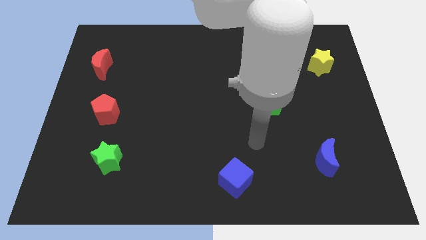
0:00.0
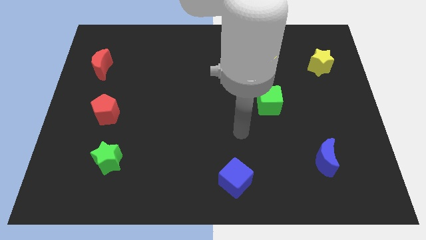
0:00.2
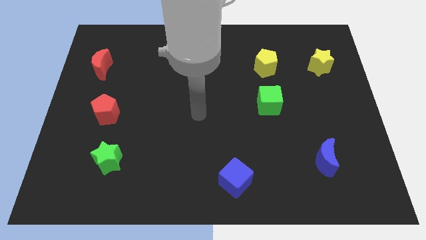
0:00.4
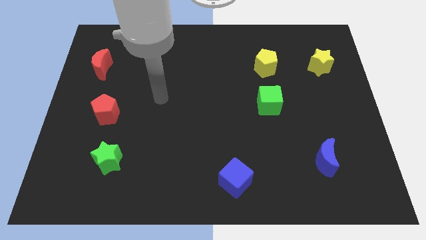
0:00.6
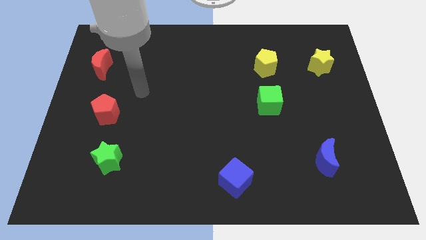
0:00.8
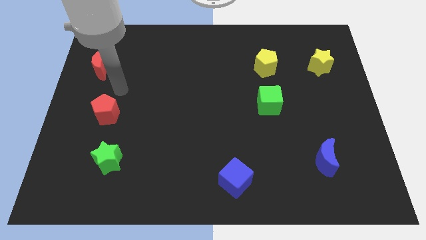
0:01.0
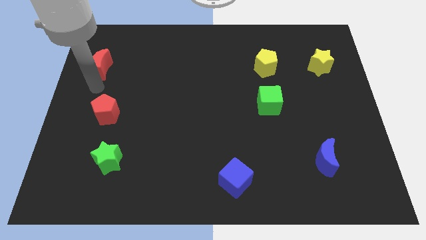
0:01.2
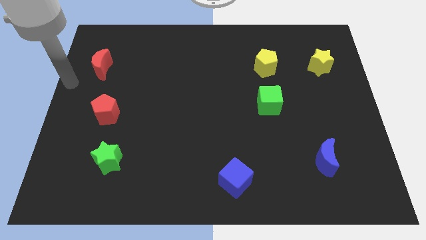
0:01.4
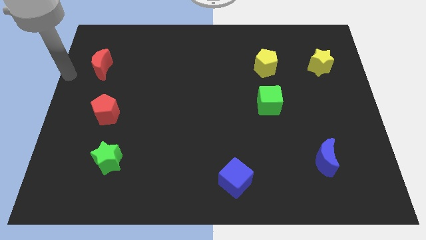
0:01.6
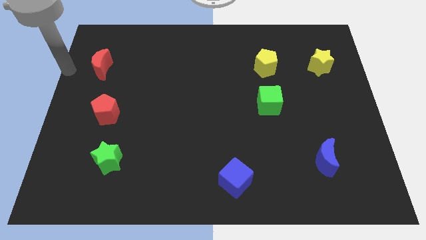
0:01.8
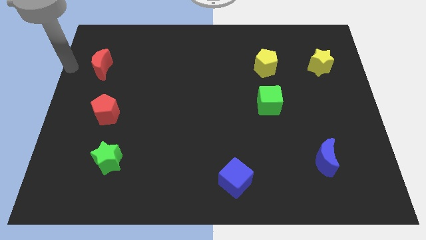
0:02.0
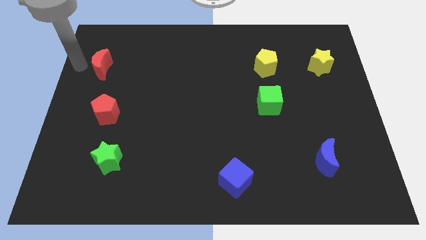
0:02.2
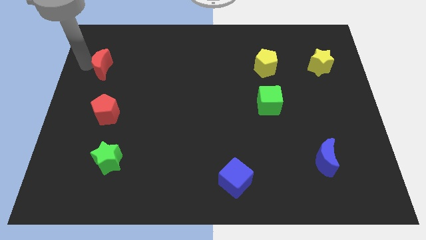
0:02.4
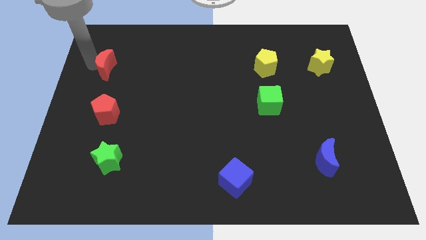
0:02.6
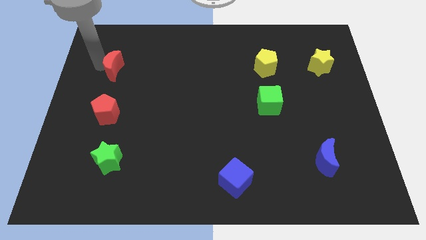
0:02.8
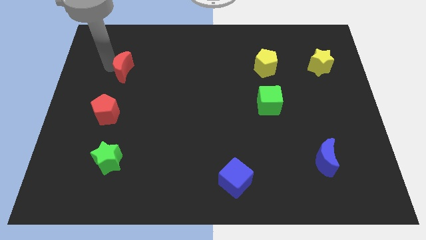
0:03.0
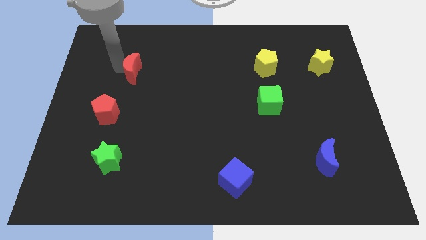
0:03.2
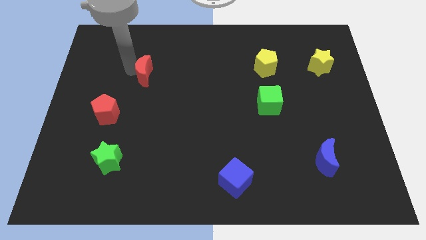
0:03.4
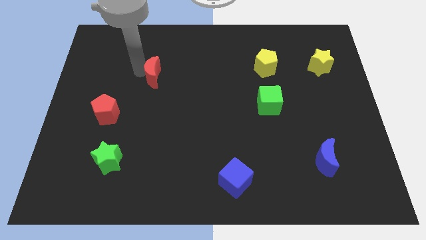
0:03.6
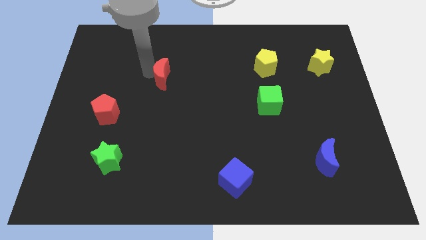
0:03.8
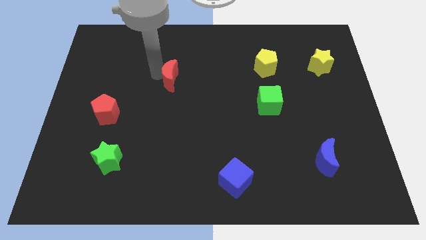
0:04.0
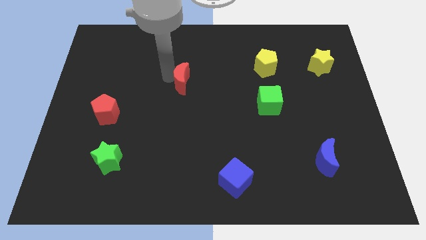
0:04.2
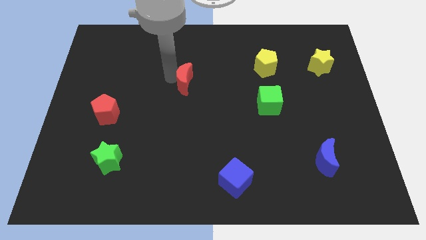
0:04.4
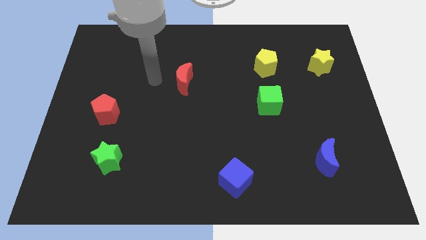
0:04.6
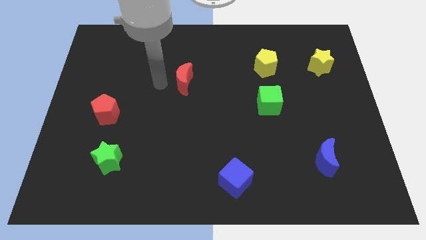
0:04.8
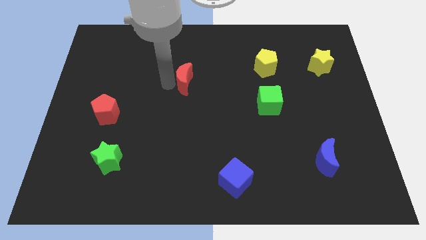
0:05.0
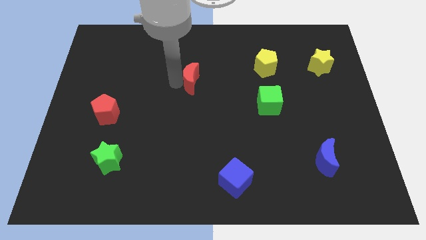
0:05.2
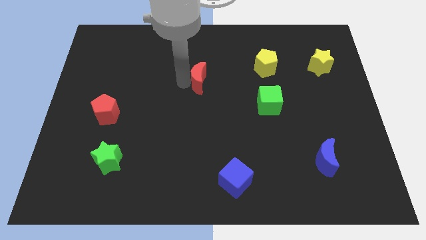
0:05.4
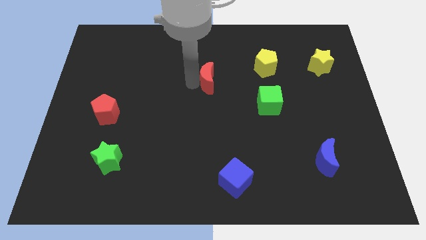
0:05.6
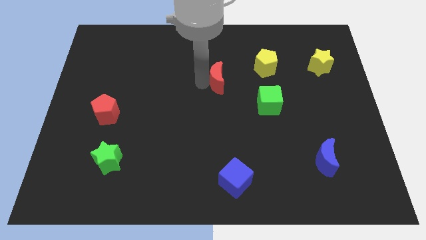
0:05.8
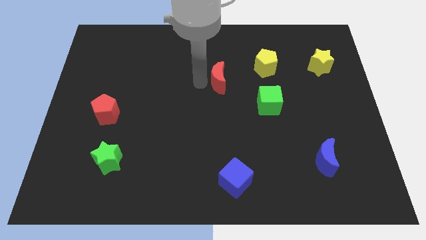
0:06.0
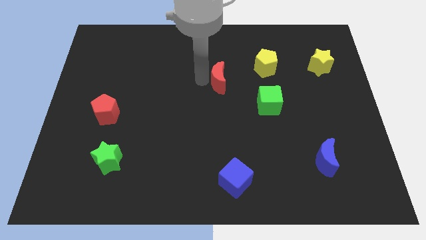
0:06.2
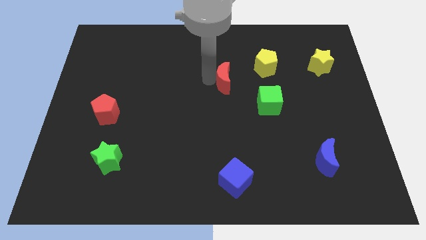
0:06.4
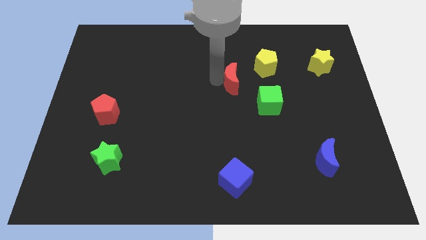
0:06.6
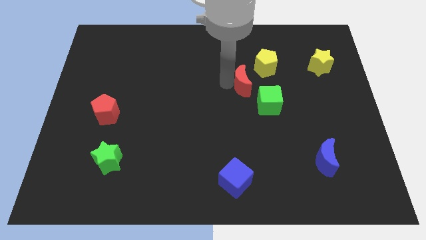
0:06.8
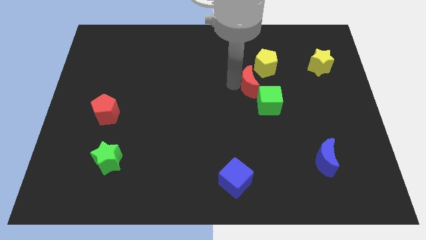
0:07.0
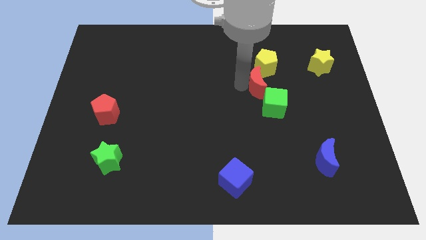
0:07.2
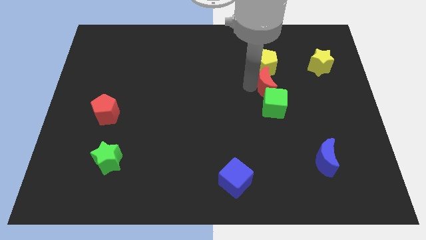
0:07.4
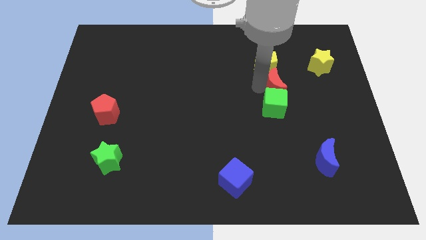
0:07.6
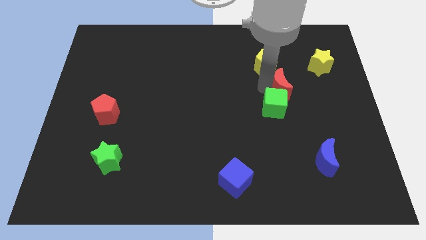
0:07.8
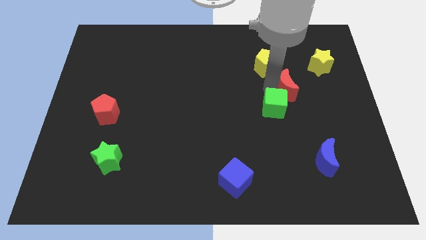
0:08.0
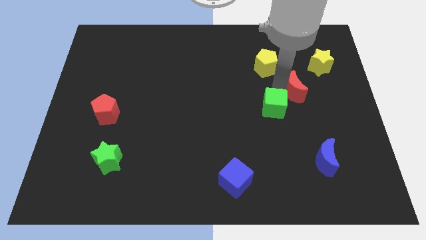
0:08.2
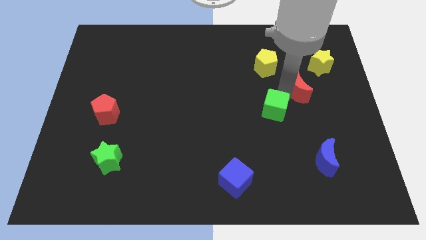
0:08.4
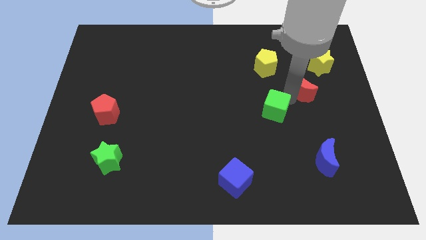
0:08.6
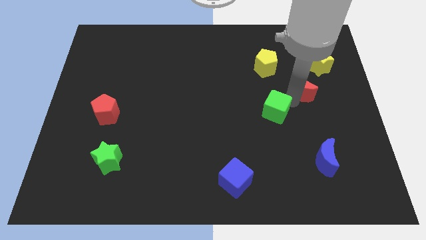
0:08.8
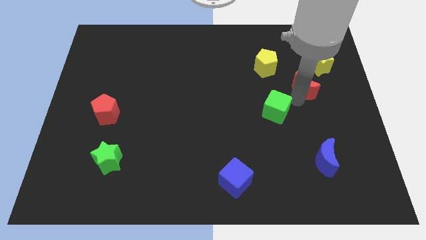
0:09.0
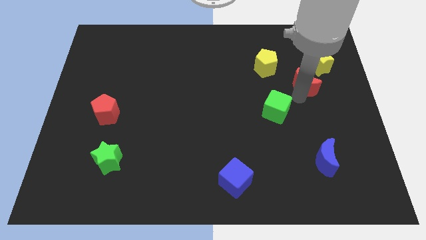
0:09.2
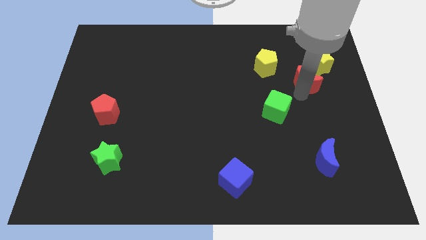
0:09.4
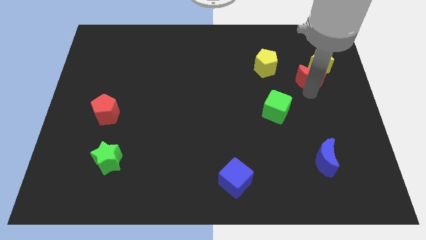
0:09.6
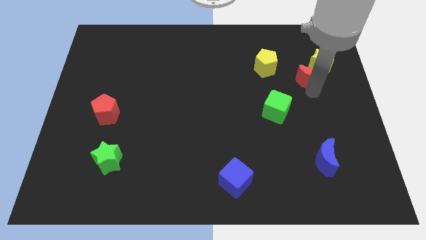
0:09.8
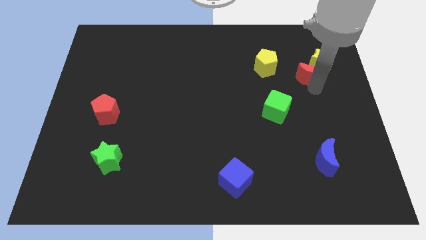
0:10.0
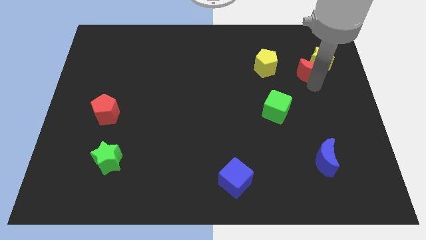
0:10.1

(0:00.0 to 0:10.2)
put the red moon next to the yellow star

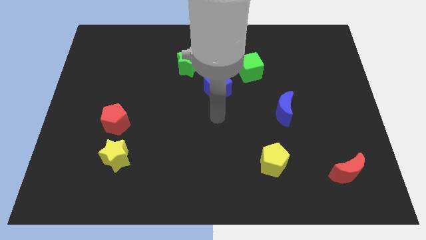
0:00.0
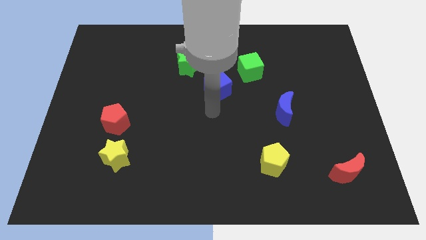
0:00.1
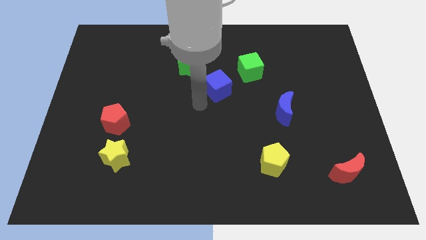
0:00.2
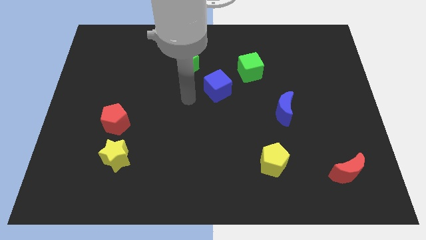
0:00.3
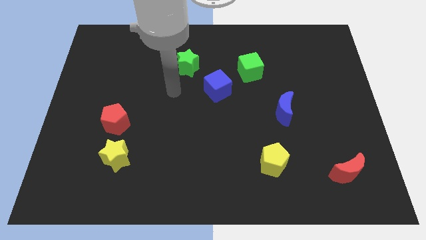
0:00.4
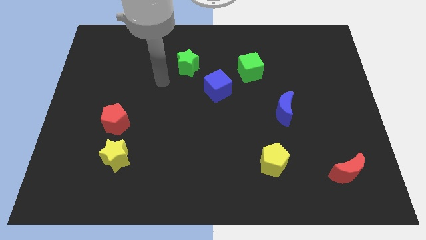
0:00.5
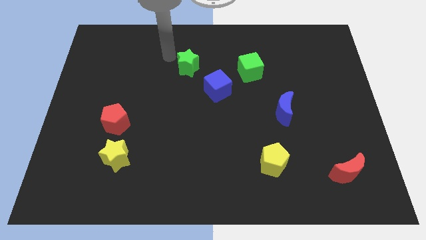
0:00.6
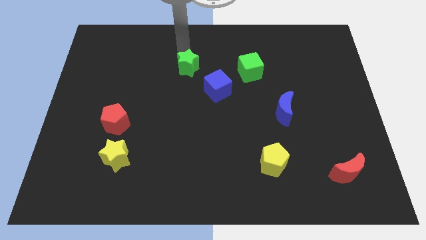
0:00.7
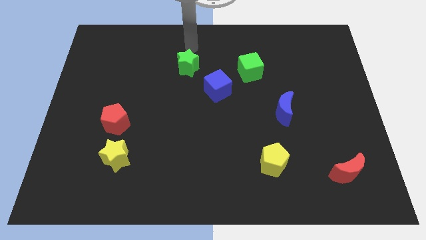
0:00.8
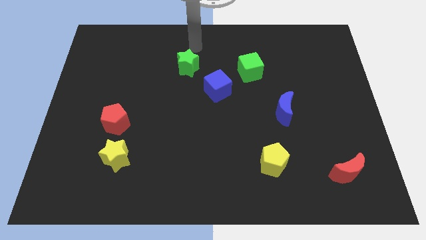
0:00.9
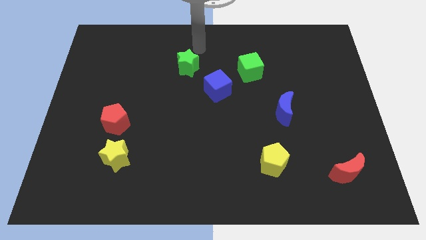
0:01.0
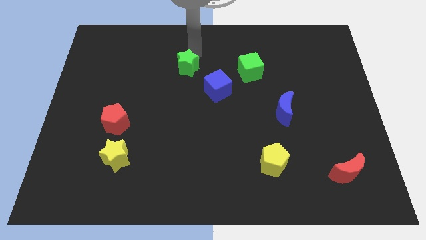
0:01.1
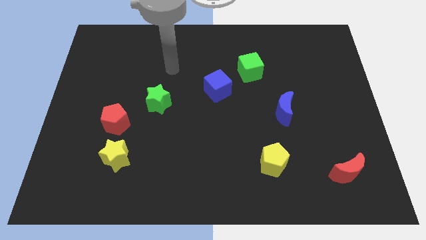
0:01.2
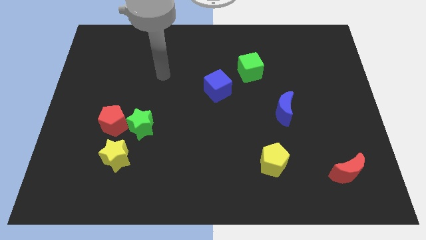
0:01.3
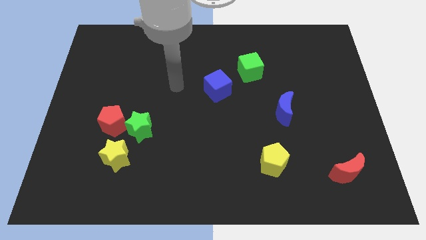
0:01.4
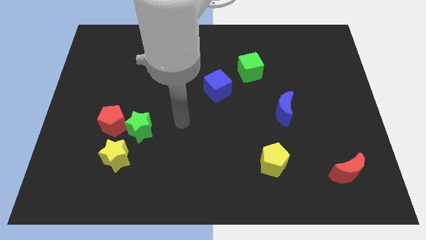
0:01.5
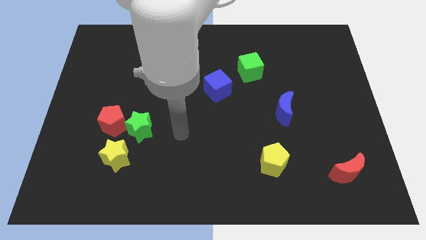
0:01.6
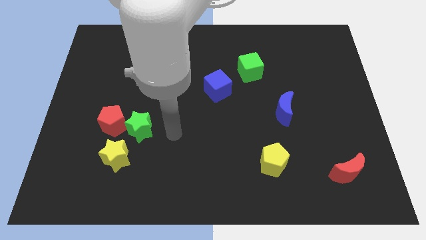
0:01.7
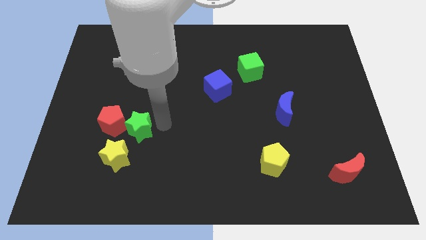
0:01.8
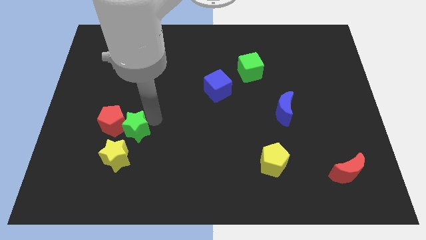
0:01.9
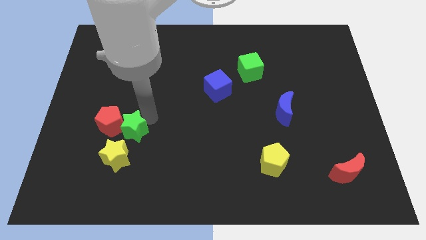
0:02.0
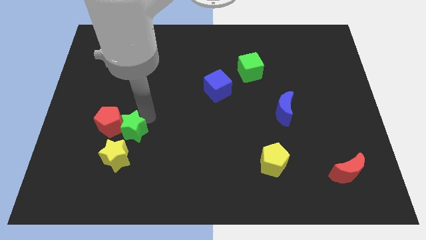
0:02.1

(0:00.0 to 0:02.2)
move the green star towards the red pentagon

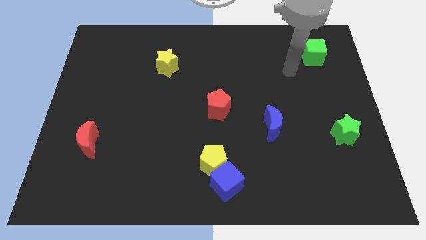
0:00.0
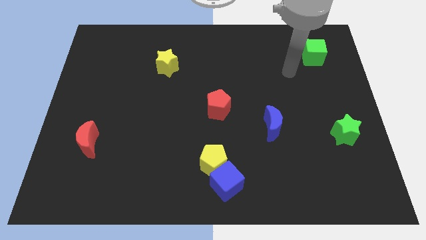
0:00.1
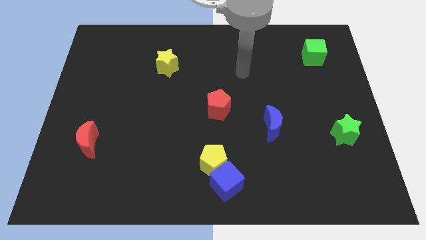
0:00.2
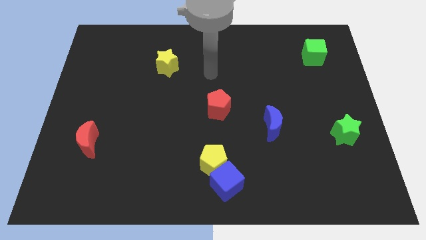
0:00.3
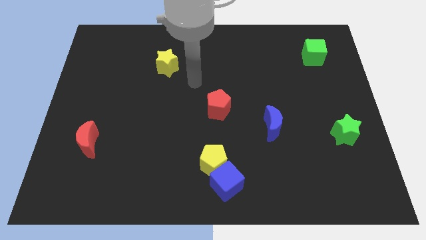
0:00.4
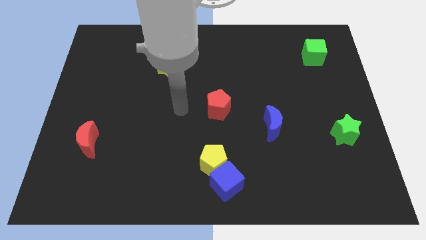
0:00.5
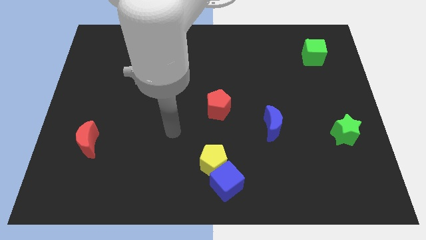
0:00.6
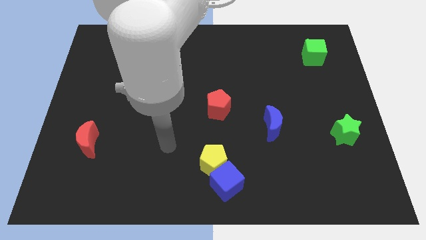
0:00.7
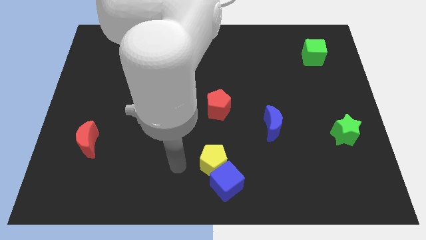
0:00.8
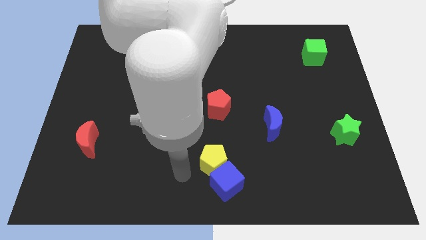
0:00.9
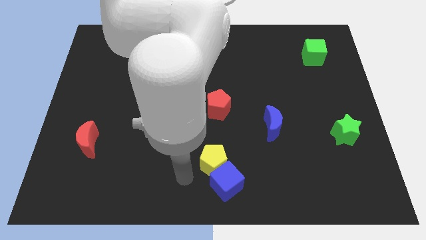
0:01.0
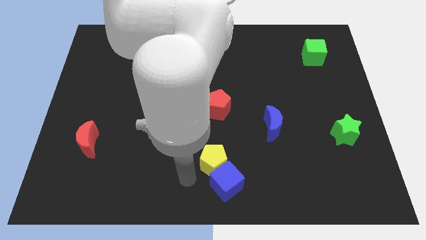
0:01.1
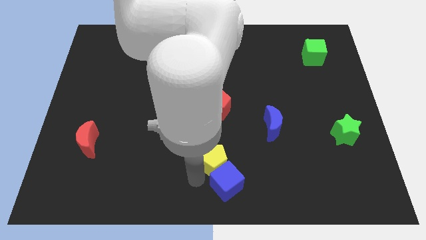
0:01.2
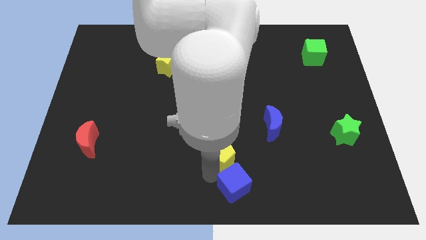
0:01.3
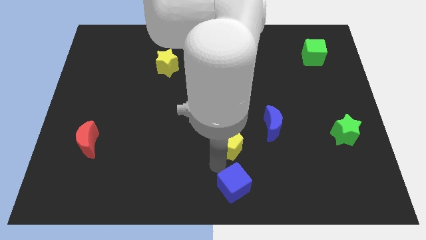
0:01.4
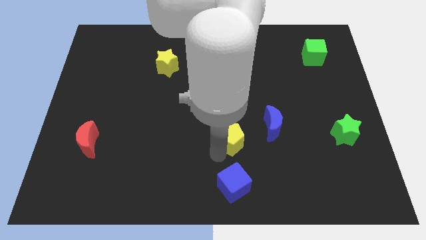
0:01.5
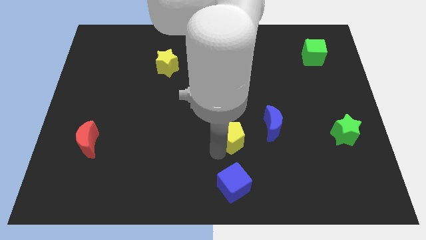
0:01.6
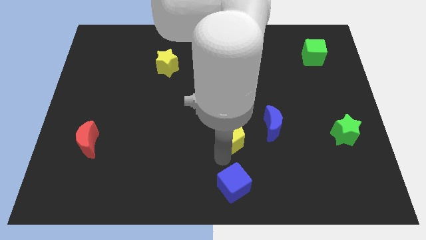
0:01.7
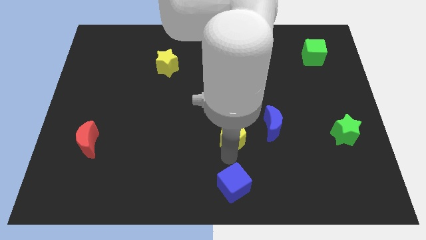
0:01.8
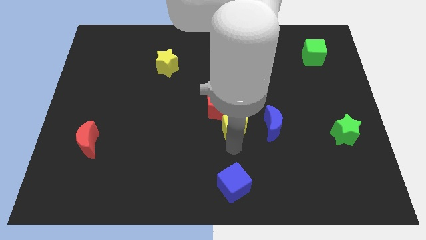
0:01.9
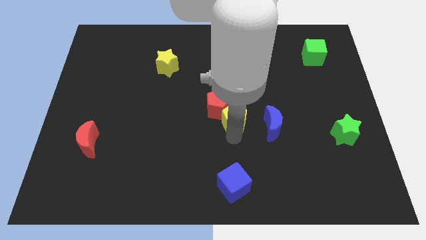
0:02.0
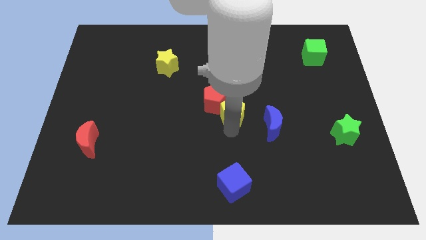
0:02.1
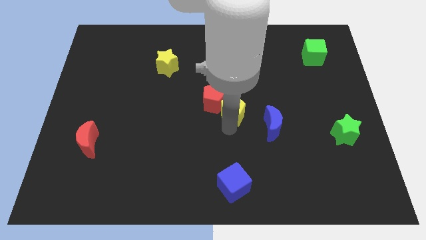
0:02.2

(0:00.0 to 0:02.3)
move the yellow pentagon to the red pentagon
